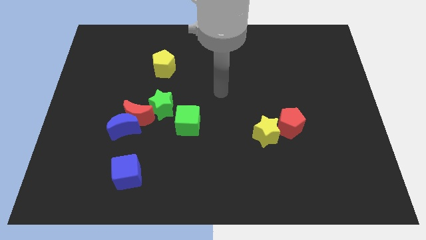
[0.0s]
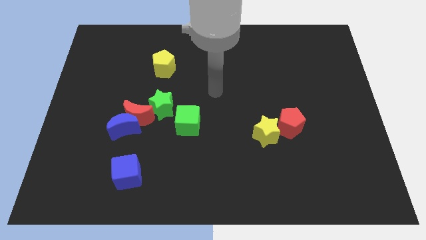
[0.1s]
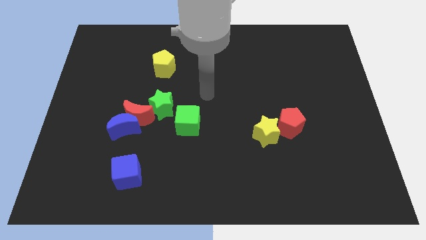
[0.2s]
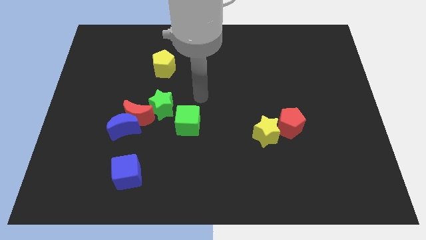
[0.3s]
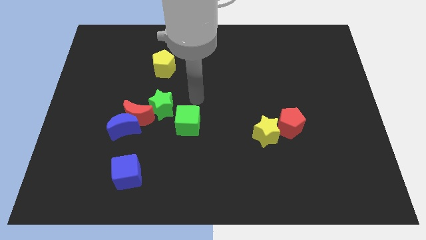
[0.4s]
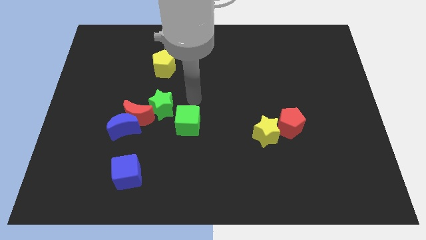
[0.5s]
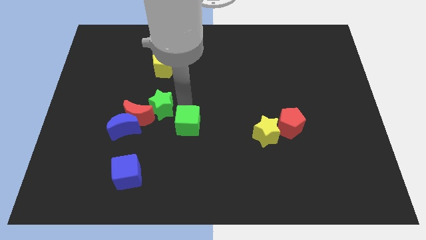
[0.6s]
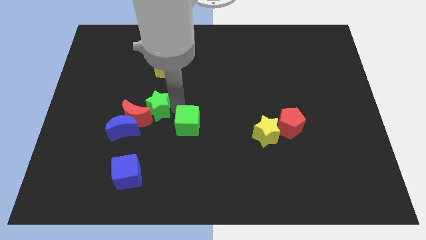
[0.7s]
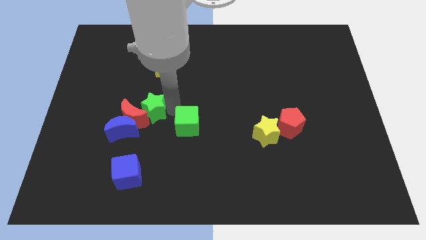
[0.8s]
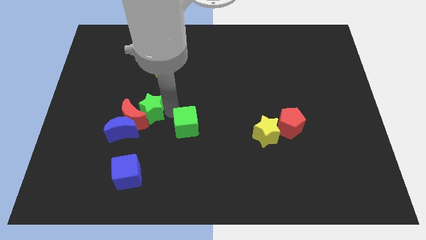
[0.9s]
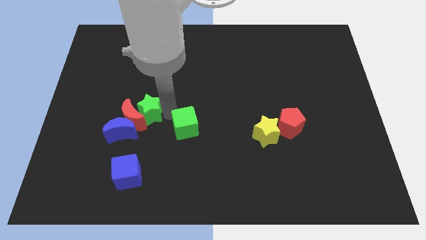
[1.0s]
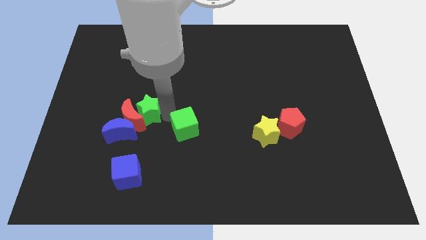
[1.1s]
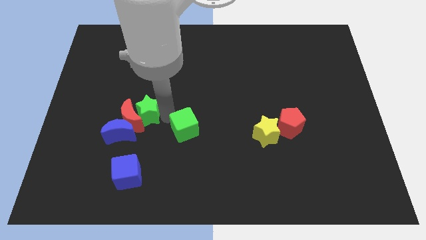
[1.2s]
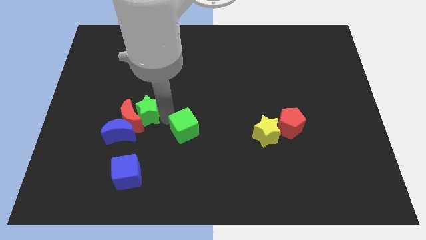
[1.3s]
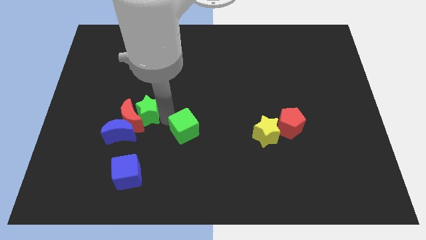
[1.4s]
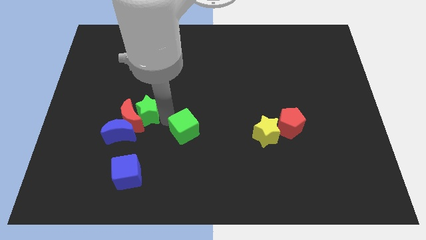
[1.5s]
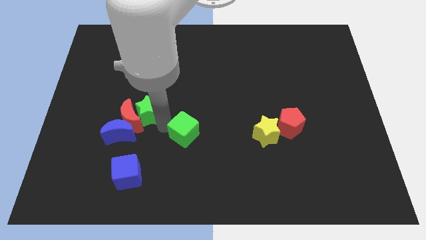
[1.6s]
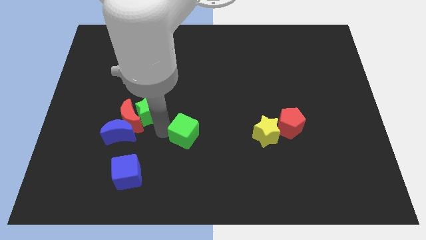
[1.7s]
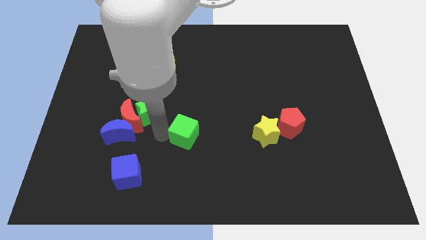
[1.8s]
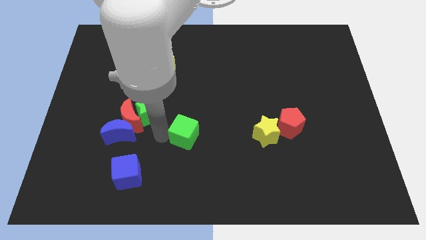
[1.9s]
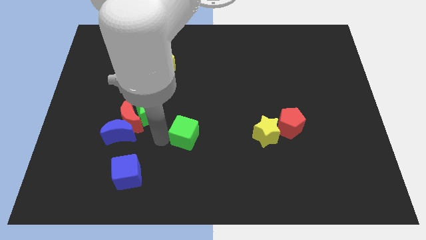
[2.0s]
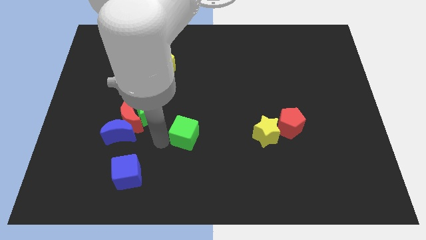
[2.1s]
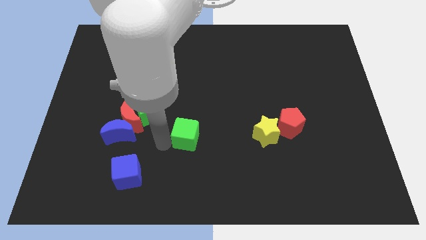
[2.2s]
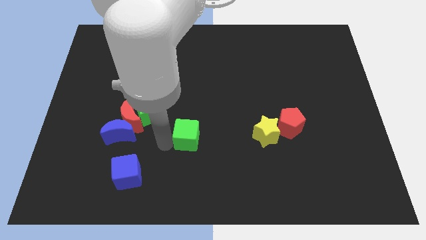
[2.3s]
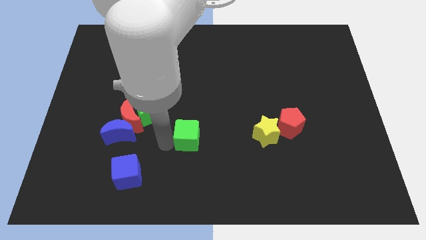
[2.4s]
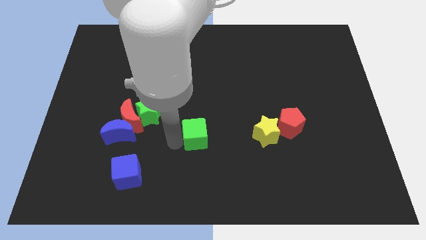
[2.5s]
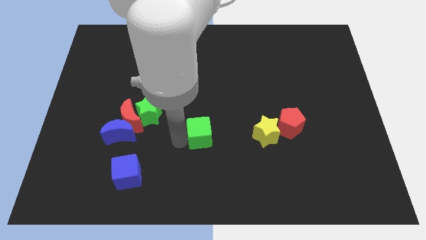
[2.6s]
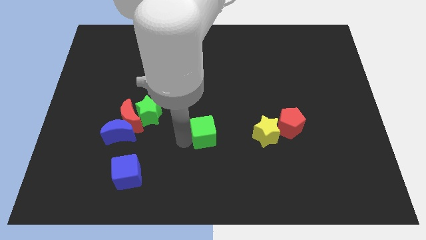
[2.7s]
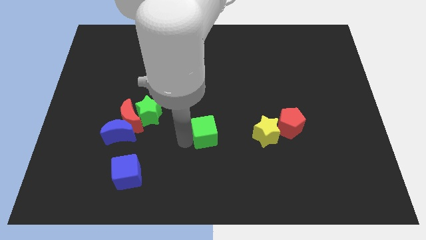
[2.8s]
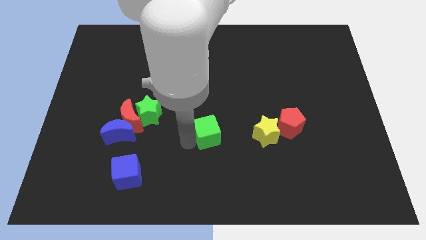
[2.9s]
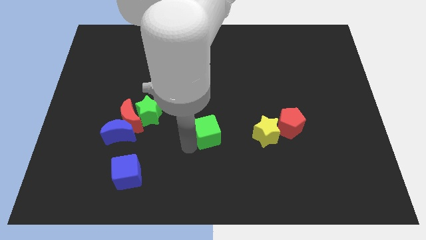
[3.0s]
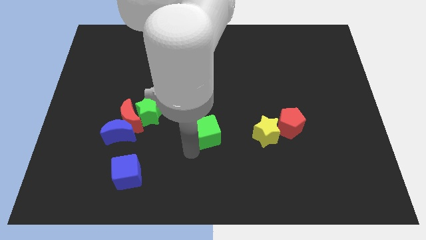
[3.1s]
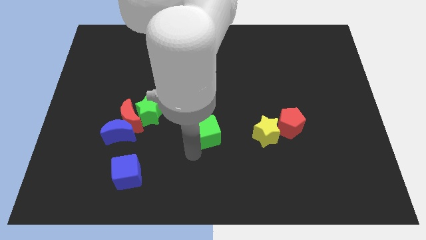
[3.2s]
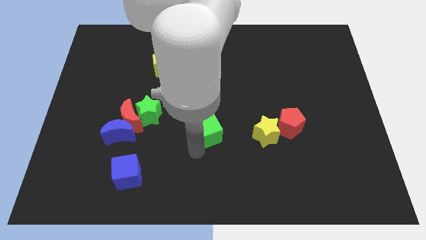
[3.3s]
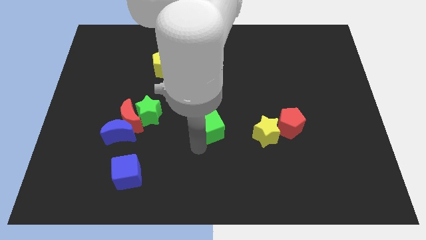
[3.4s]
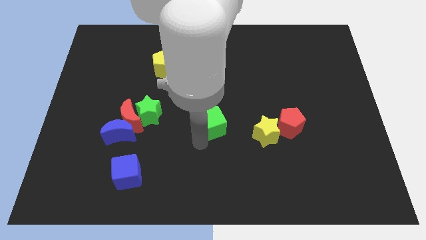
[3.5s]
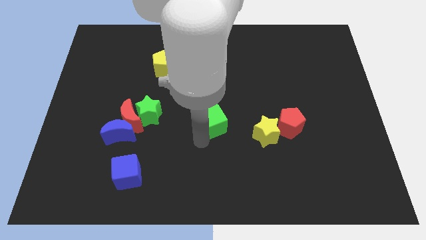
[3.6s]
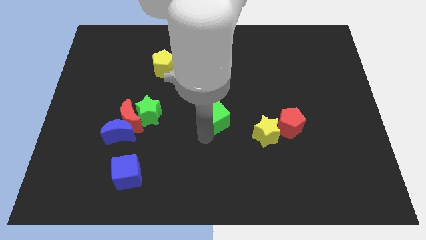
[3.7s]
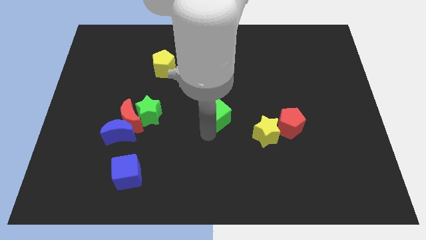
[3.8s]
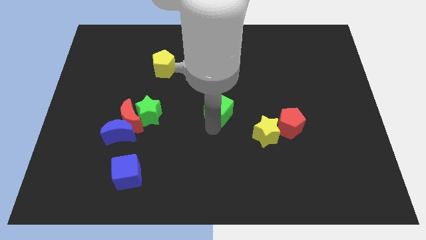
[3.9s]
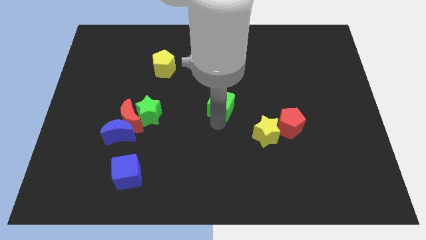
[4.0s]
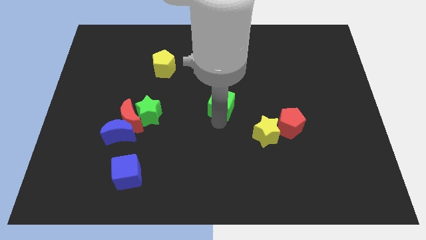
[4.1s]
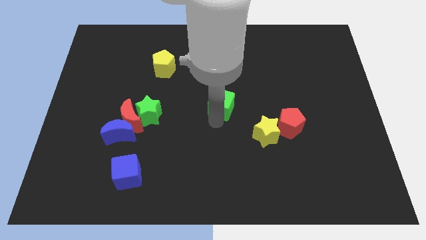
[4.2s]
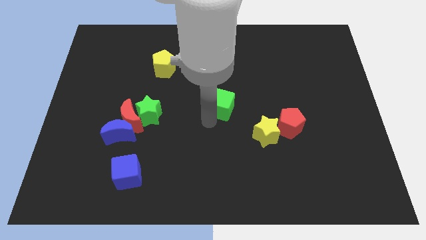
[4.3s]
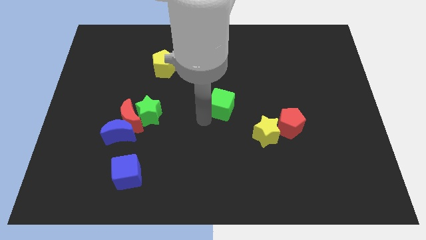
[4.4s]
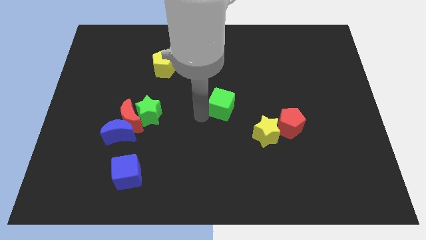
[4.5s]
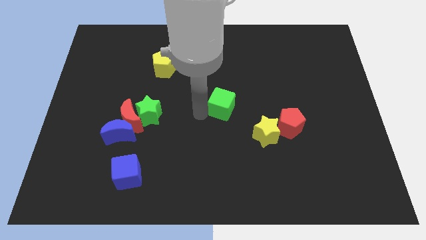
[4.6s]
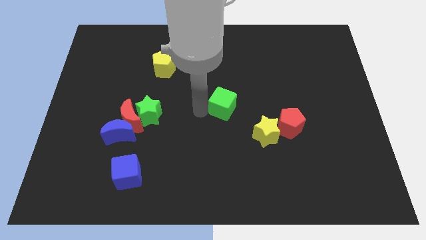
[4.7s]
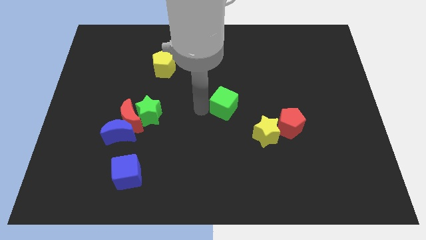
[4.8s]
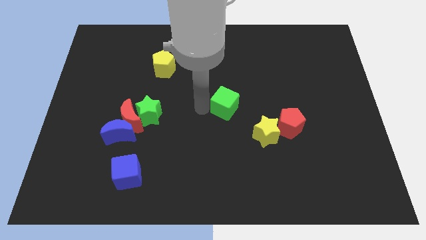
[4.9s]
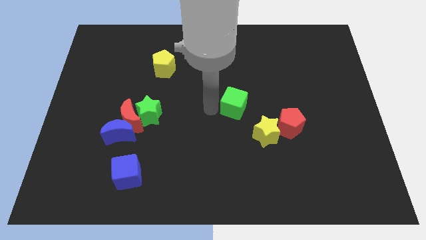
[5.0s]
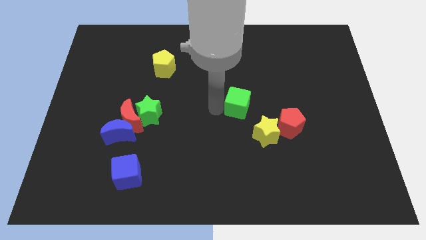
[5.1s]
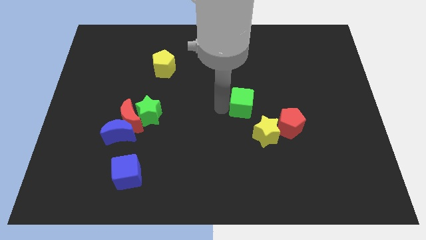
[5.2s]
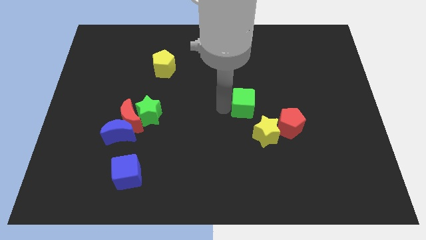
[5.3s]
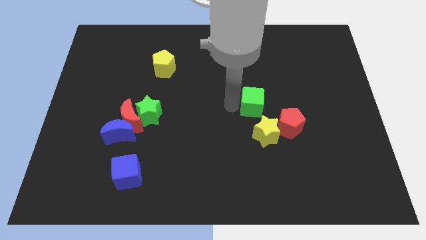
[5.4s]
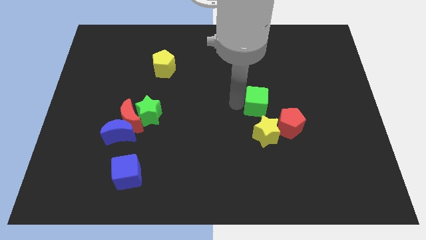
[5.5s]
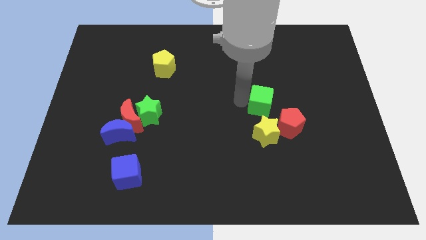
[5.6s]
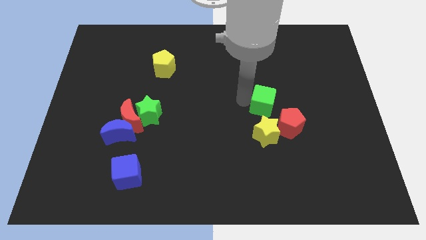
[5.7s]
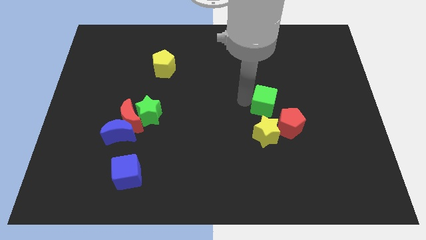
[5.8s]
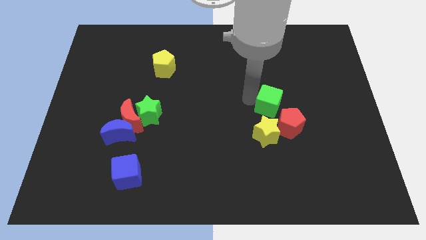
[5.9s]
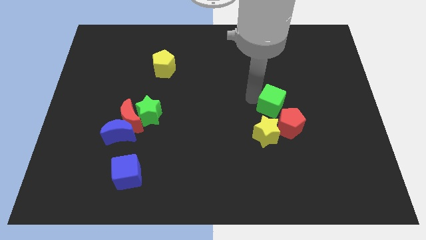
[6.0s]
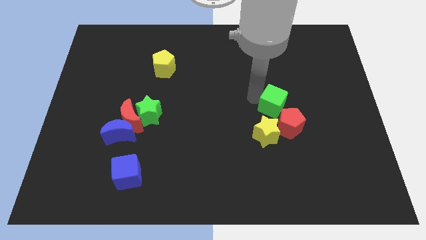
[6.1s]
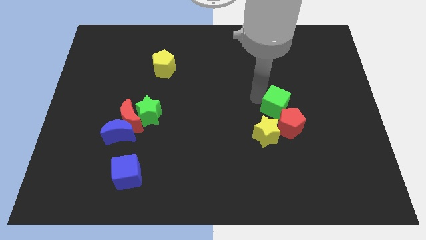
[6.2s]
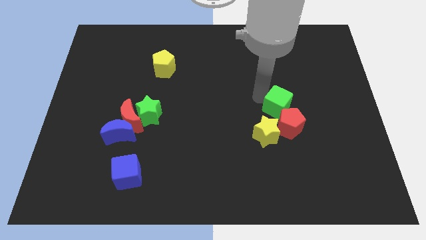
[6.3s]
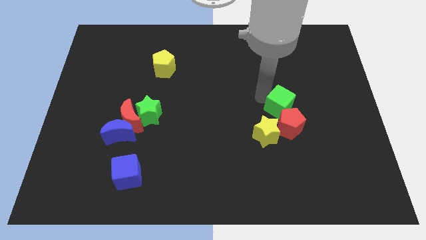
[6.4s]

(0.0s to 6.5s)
push the green cube towards the red pentagon

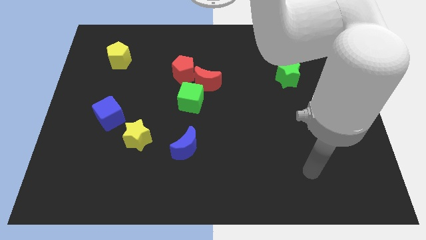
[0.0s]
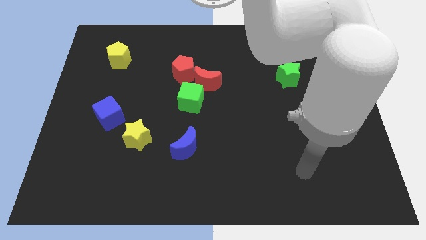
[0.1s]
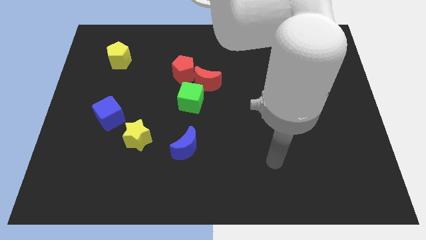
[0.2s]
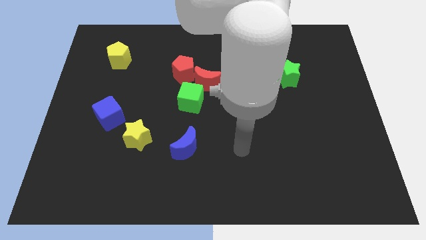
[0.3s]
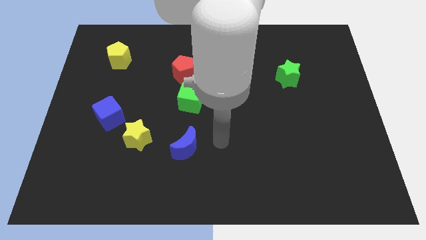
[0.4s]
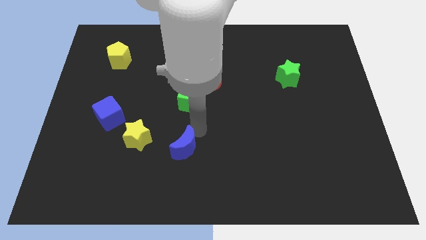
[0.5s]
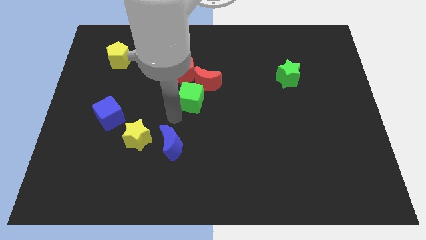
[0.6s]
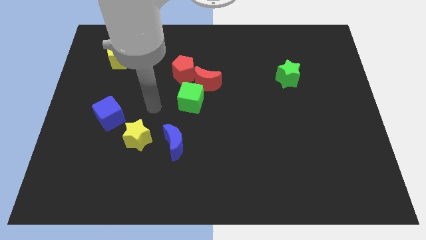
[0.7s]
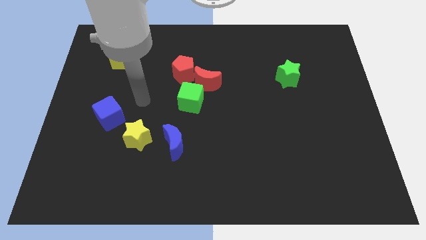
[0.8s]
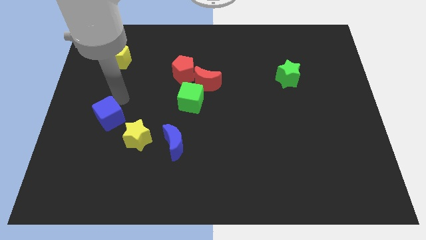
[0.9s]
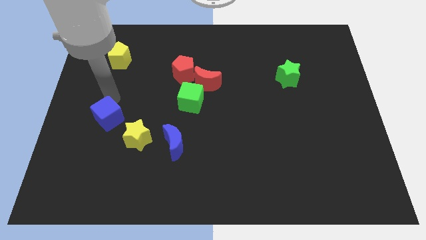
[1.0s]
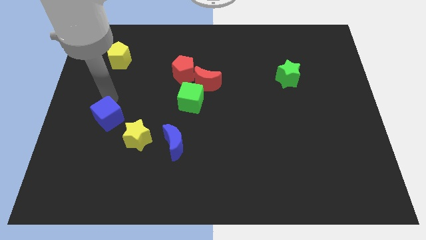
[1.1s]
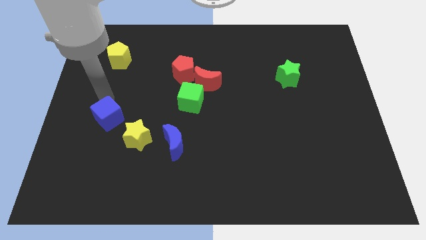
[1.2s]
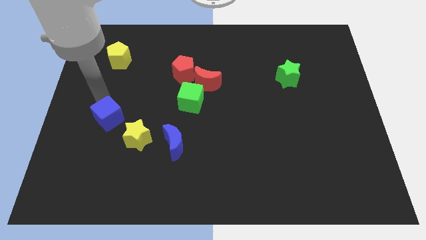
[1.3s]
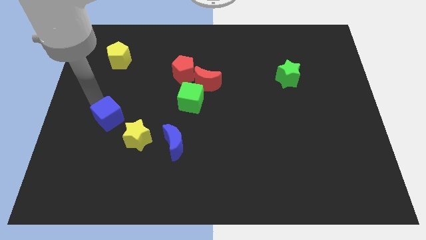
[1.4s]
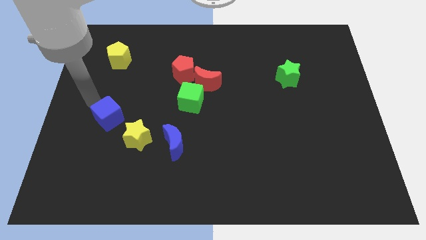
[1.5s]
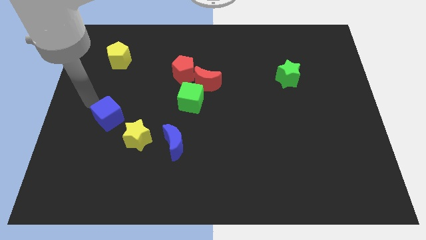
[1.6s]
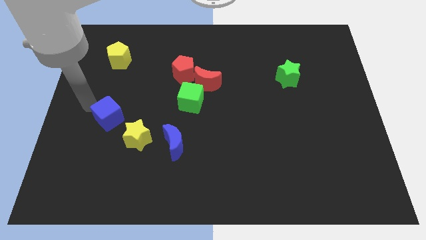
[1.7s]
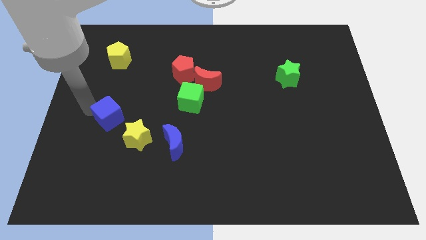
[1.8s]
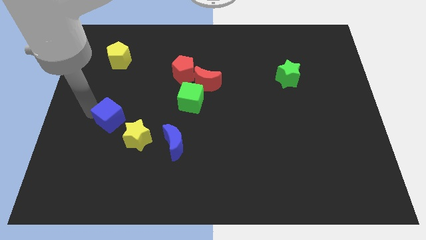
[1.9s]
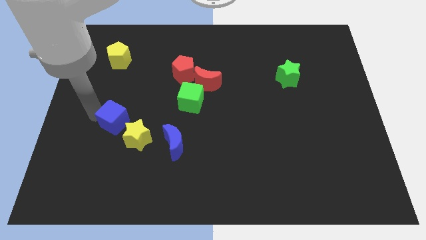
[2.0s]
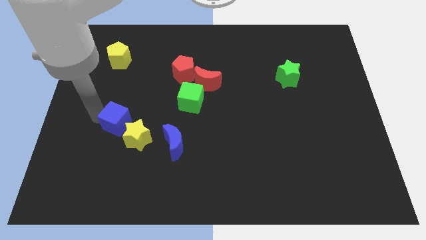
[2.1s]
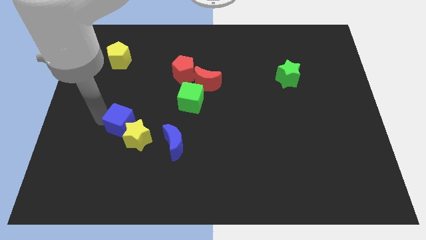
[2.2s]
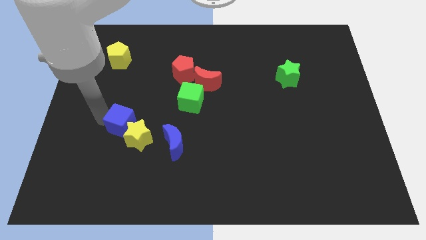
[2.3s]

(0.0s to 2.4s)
slide the blue cube close to the yellow star
